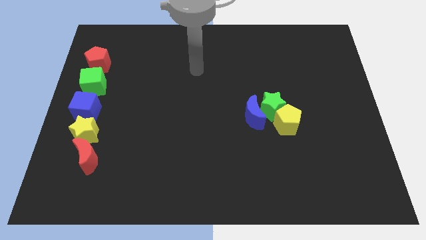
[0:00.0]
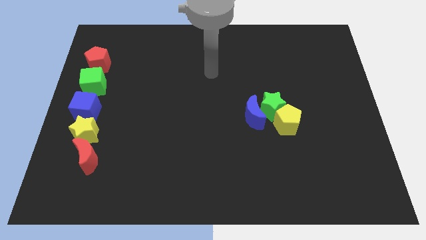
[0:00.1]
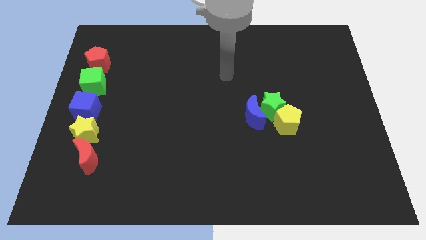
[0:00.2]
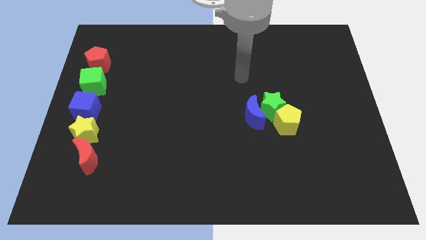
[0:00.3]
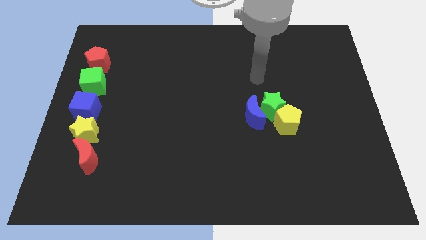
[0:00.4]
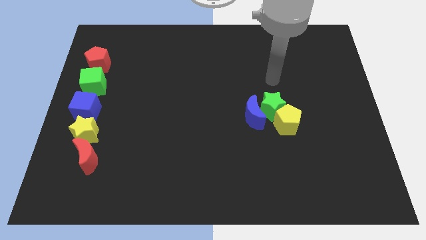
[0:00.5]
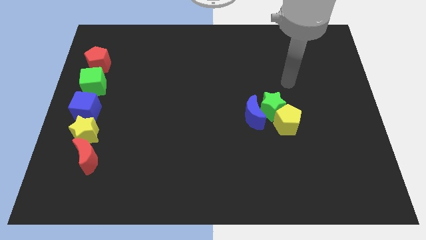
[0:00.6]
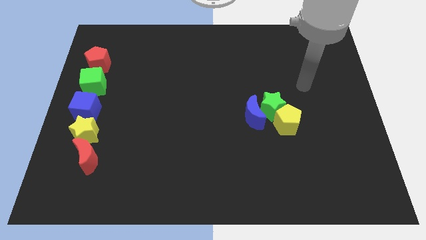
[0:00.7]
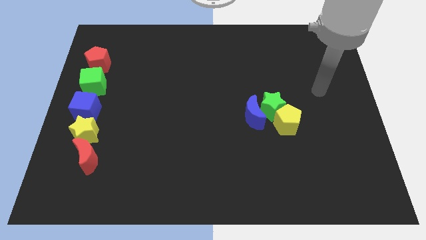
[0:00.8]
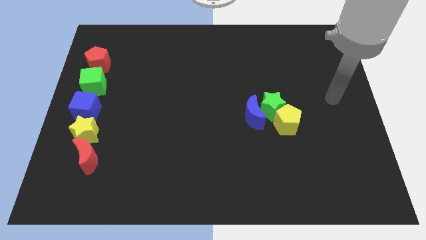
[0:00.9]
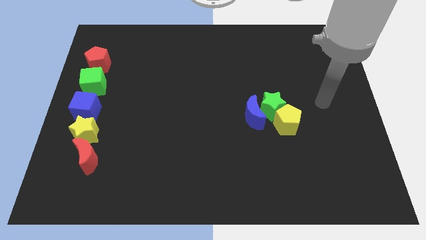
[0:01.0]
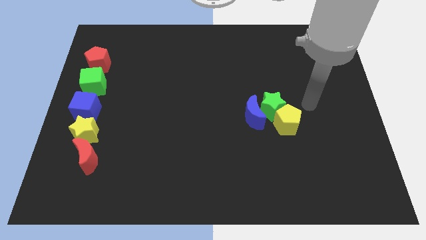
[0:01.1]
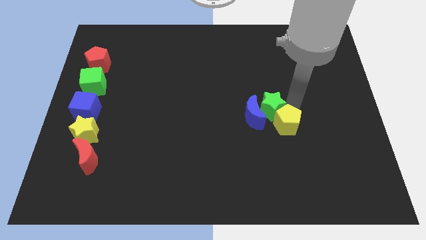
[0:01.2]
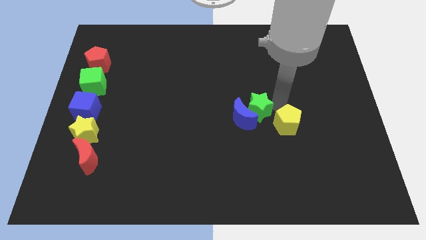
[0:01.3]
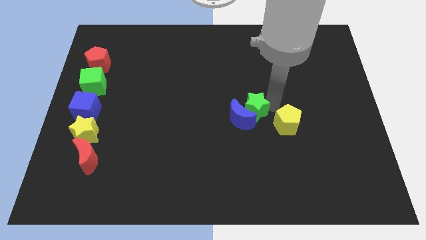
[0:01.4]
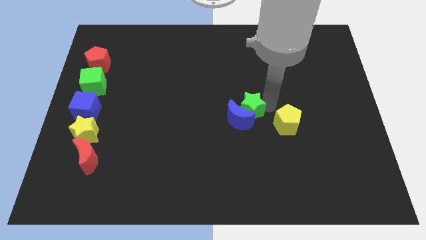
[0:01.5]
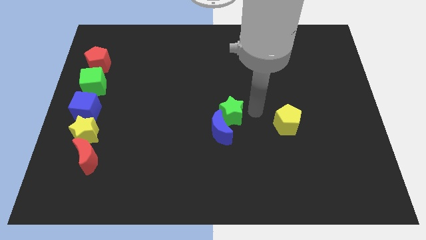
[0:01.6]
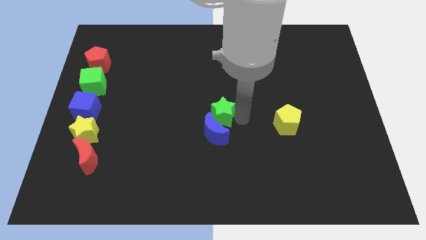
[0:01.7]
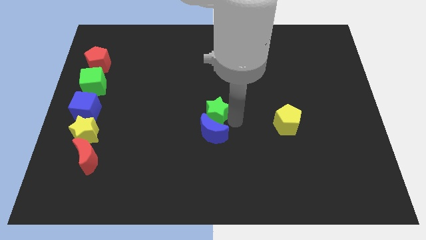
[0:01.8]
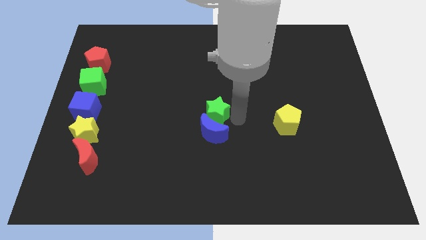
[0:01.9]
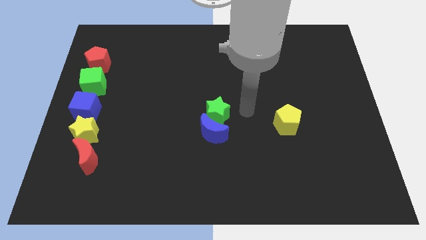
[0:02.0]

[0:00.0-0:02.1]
separate green star and blue moon from the yellow pentagon

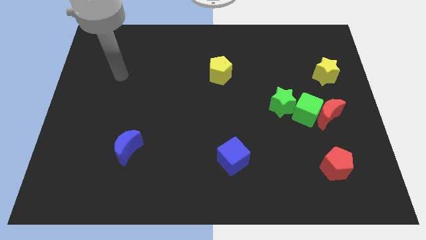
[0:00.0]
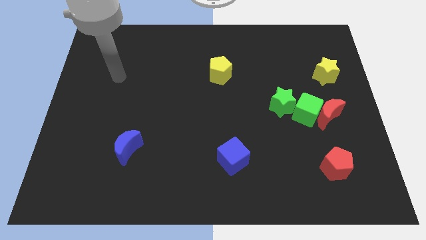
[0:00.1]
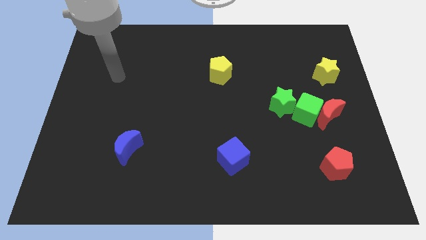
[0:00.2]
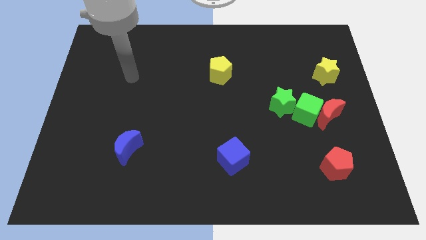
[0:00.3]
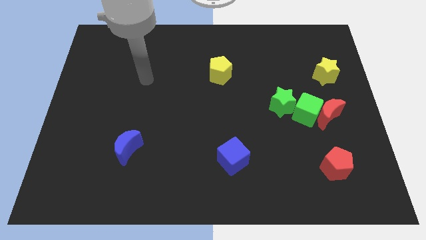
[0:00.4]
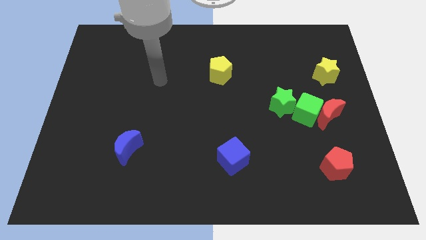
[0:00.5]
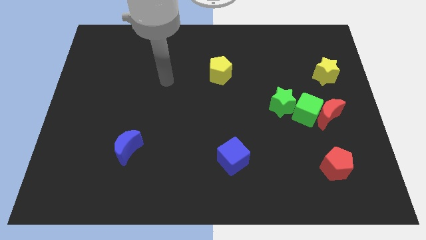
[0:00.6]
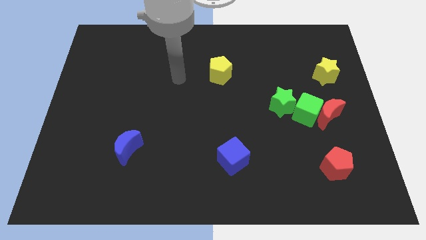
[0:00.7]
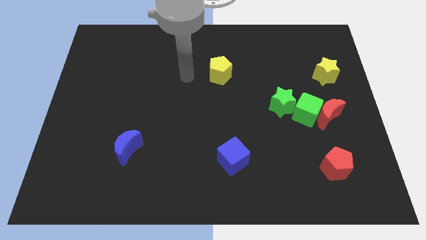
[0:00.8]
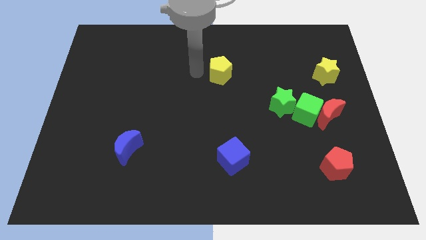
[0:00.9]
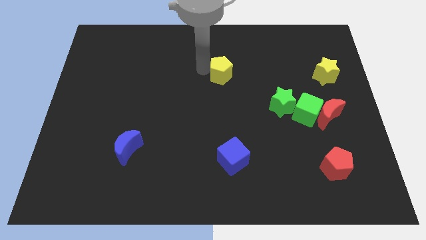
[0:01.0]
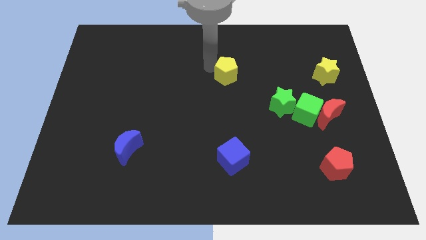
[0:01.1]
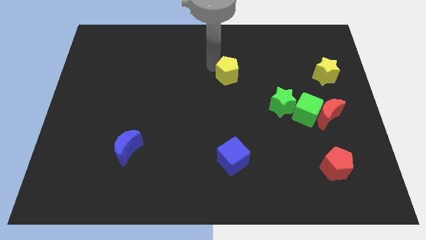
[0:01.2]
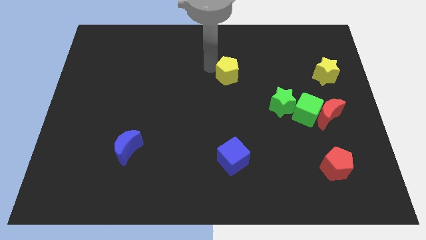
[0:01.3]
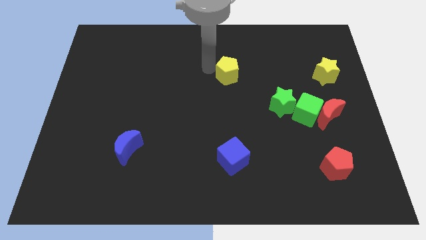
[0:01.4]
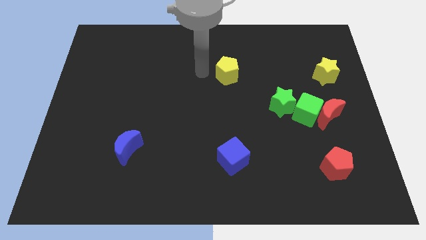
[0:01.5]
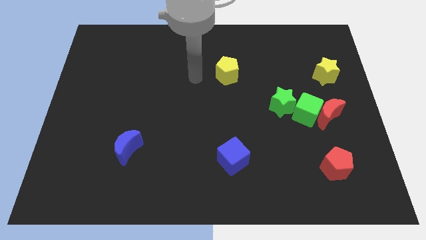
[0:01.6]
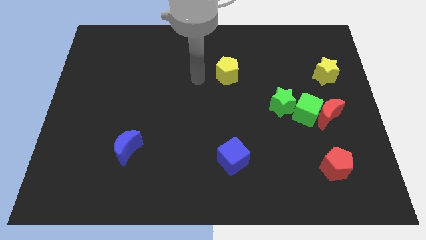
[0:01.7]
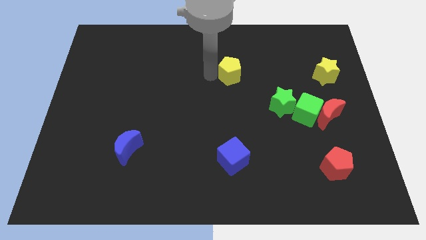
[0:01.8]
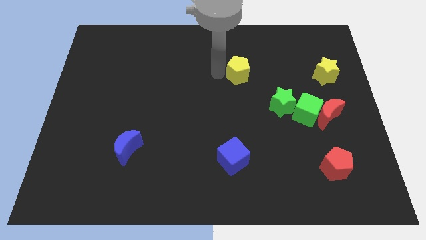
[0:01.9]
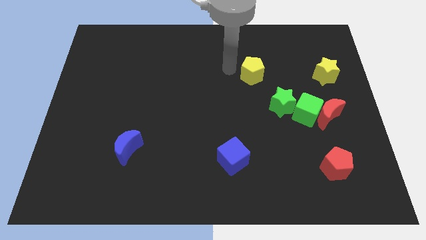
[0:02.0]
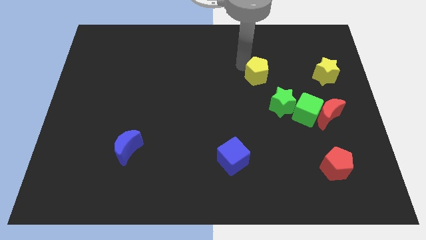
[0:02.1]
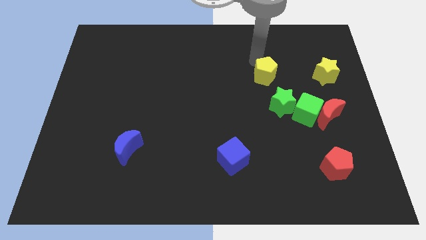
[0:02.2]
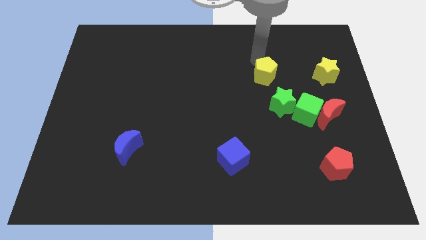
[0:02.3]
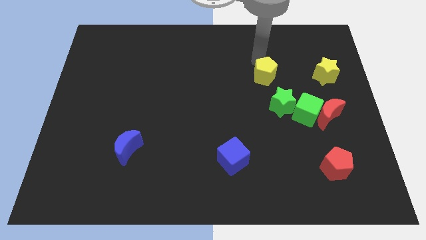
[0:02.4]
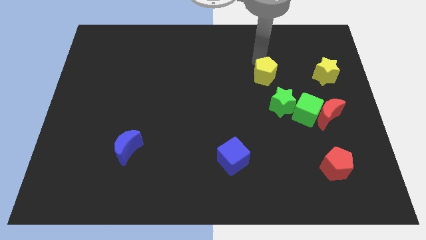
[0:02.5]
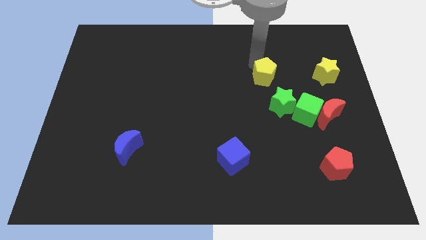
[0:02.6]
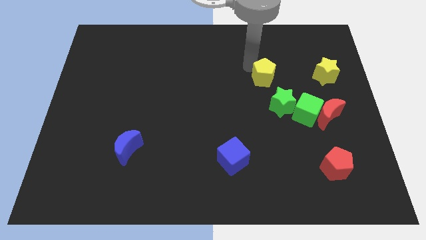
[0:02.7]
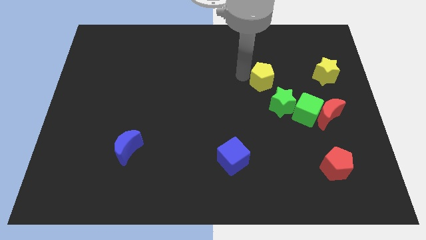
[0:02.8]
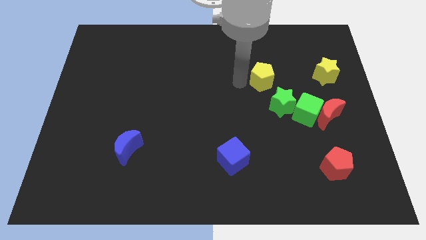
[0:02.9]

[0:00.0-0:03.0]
move the yellow pentagon diagonally to blue cube

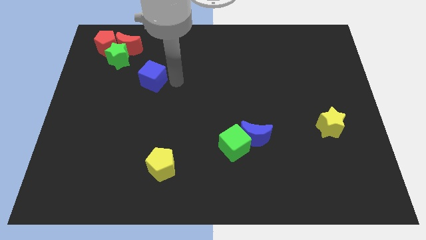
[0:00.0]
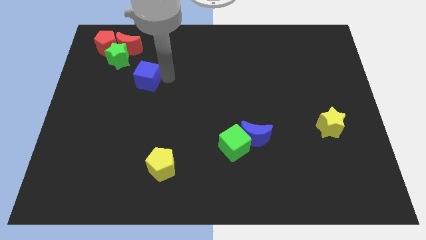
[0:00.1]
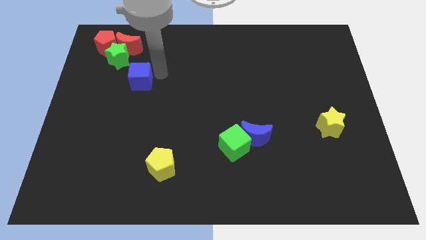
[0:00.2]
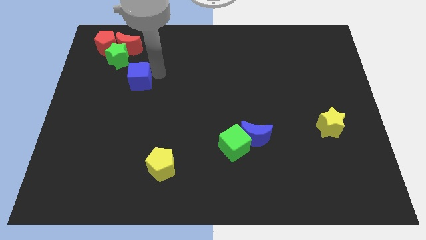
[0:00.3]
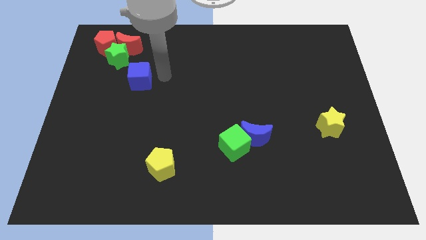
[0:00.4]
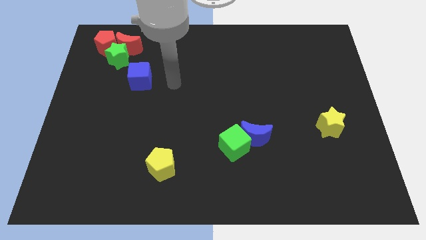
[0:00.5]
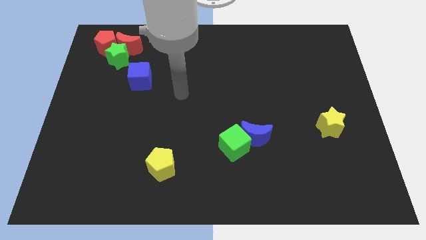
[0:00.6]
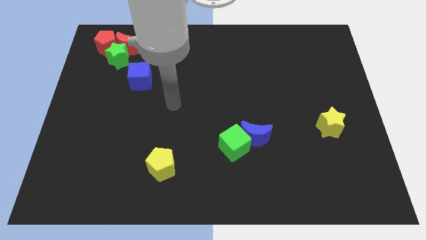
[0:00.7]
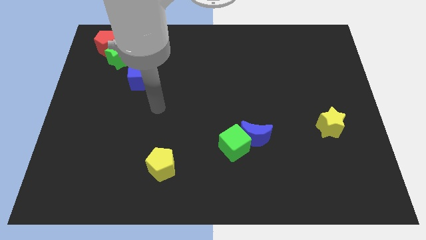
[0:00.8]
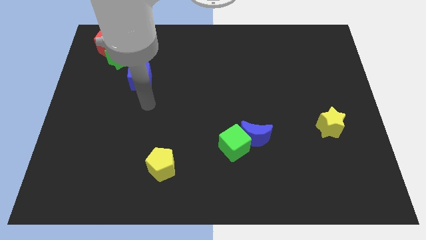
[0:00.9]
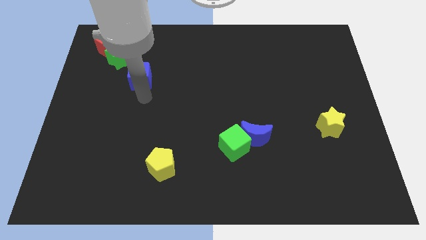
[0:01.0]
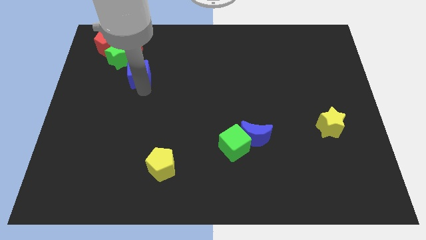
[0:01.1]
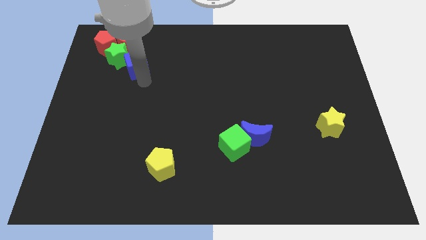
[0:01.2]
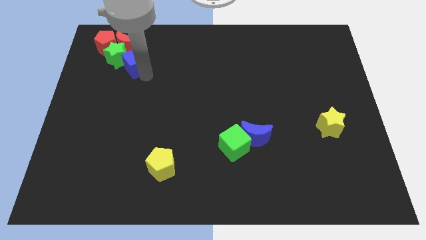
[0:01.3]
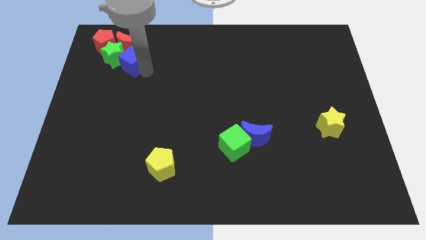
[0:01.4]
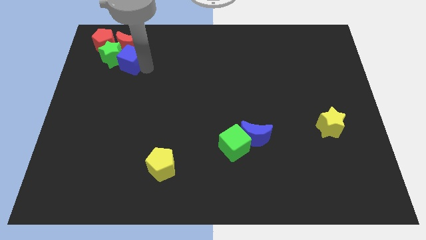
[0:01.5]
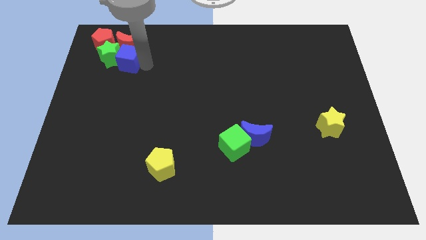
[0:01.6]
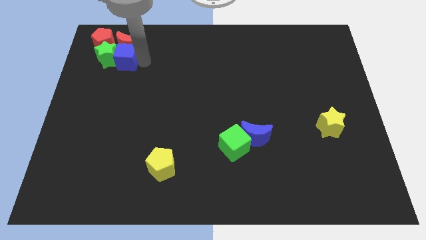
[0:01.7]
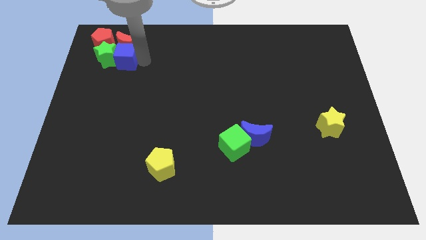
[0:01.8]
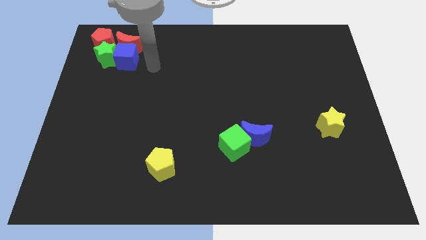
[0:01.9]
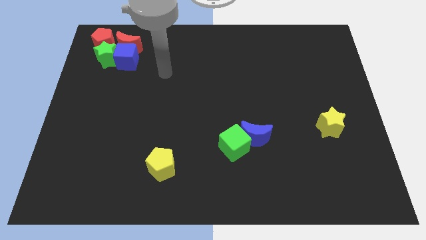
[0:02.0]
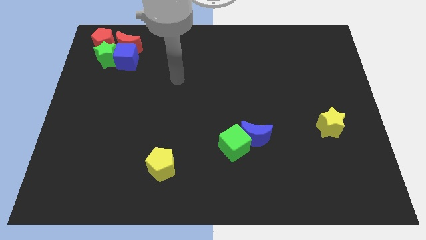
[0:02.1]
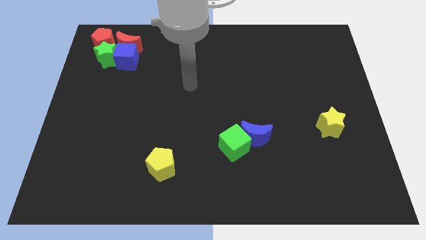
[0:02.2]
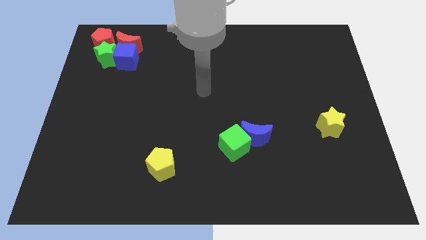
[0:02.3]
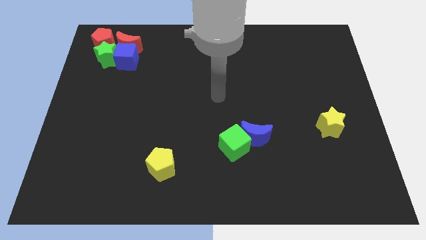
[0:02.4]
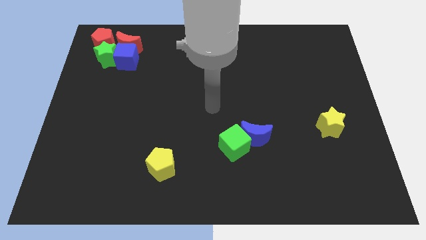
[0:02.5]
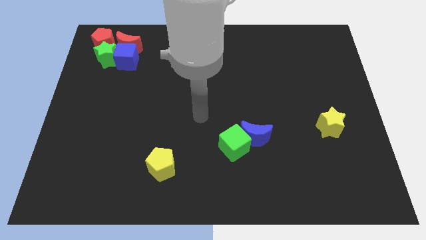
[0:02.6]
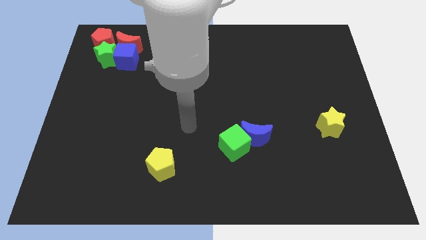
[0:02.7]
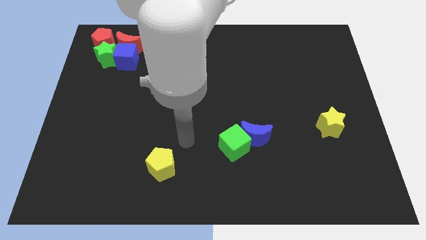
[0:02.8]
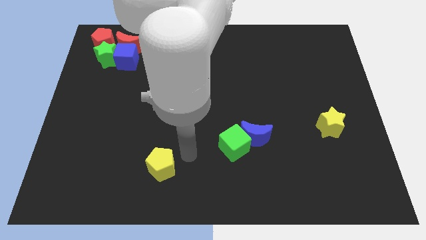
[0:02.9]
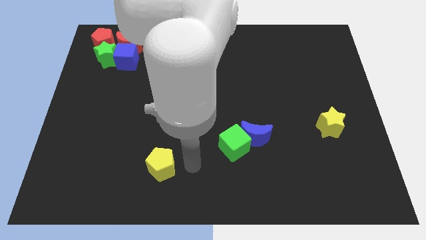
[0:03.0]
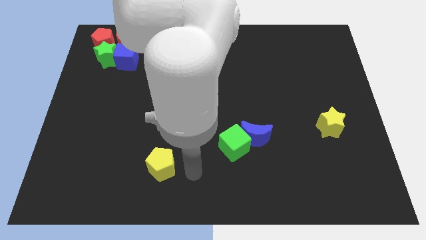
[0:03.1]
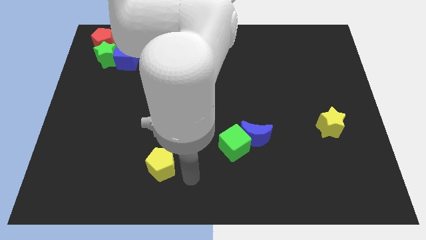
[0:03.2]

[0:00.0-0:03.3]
slide the blue cube into the group of blocks

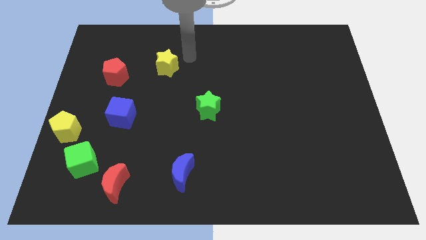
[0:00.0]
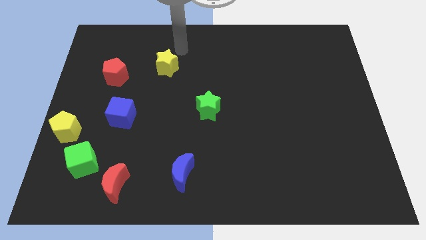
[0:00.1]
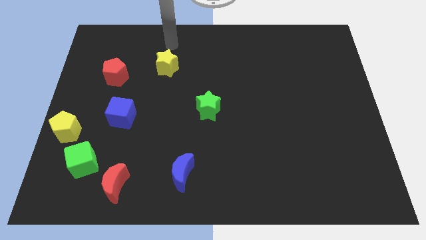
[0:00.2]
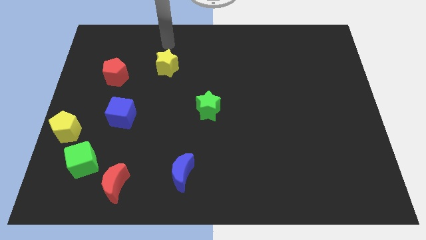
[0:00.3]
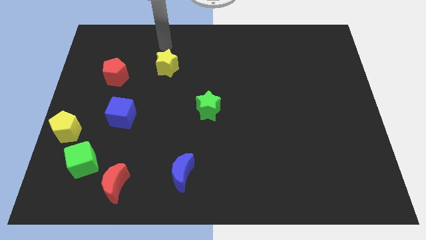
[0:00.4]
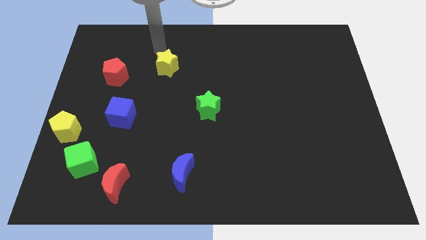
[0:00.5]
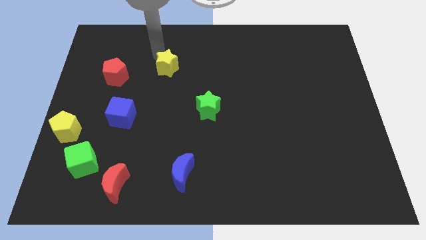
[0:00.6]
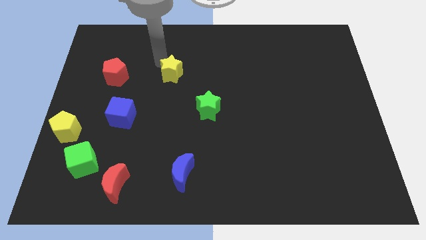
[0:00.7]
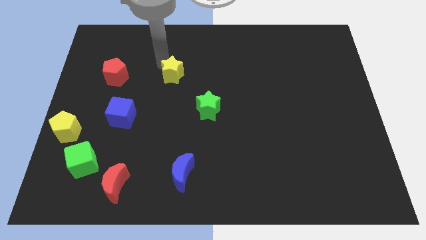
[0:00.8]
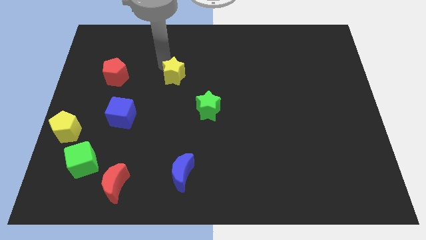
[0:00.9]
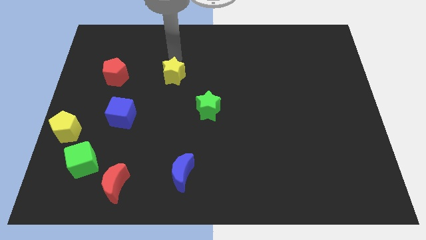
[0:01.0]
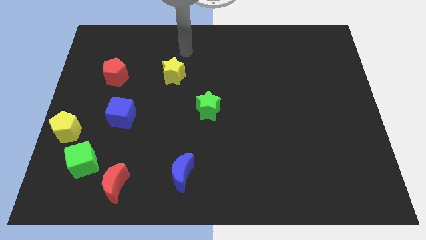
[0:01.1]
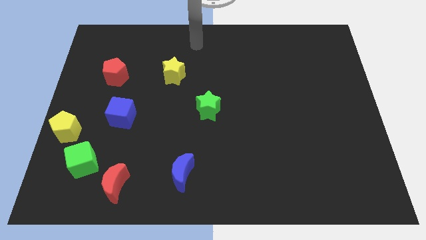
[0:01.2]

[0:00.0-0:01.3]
move the yellow star to the right of the red pentagon
